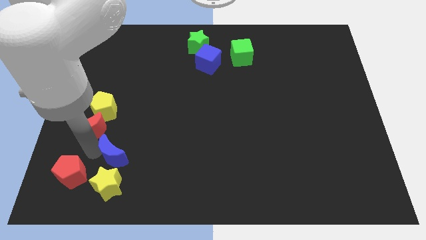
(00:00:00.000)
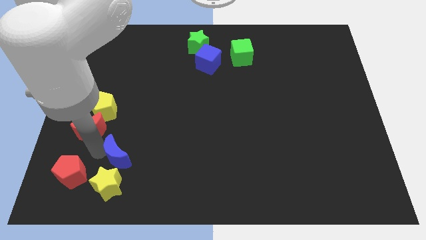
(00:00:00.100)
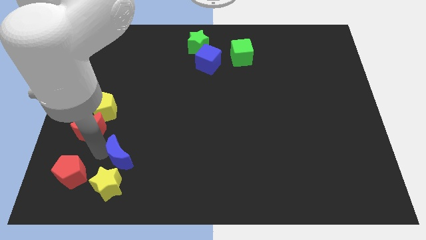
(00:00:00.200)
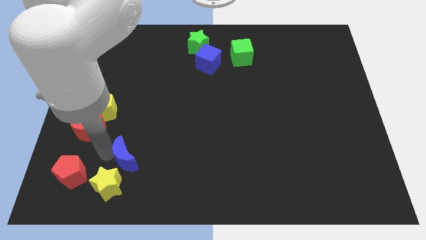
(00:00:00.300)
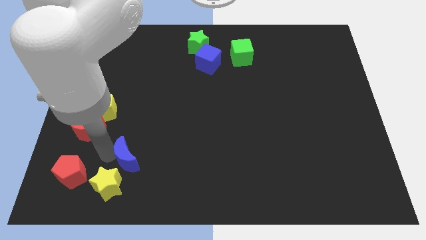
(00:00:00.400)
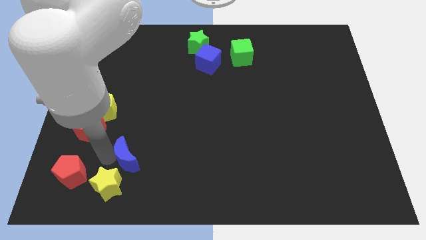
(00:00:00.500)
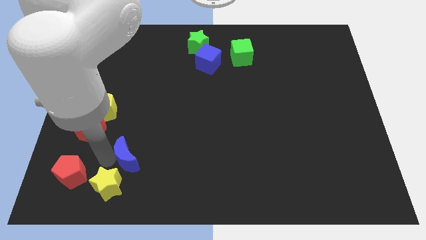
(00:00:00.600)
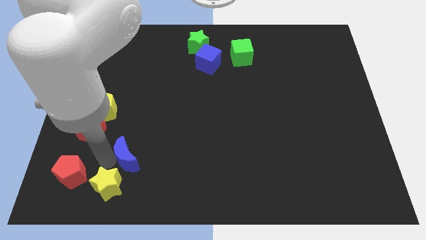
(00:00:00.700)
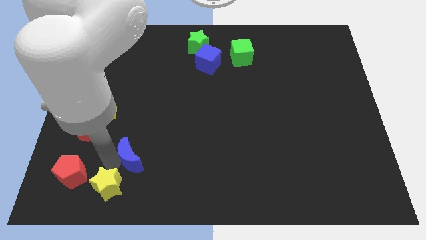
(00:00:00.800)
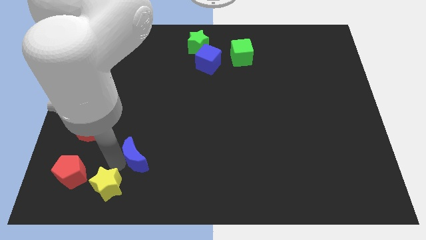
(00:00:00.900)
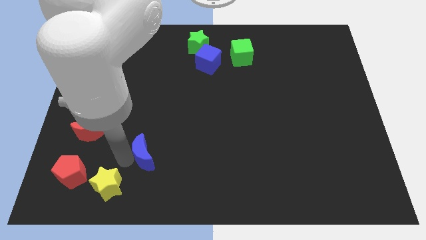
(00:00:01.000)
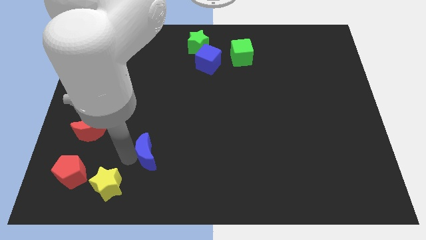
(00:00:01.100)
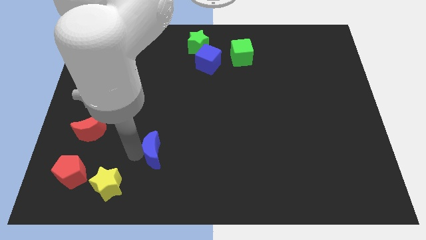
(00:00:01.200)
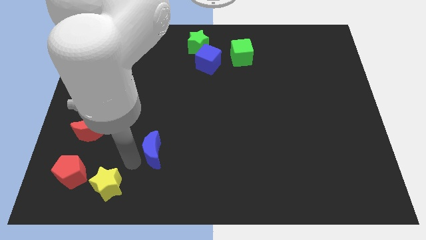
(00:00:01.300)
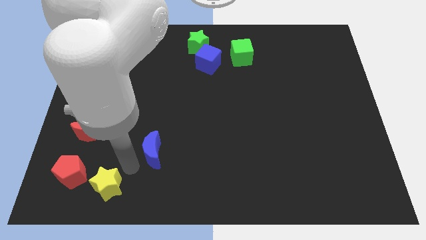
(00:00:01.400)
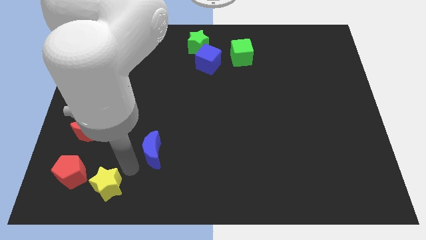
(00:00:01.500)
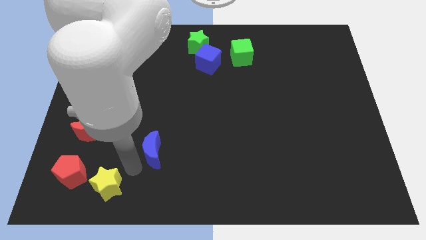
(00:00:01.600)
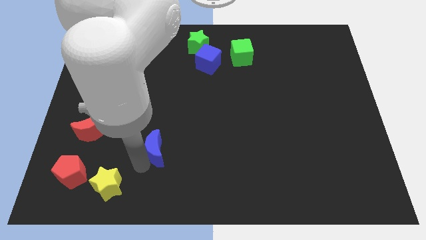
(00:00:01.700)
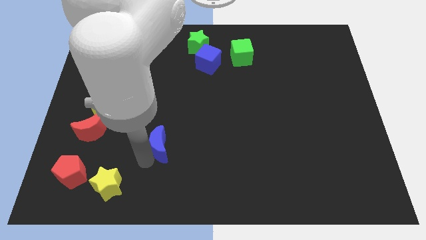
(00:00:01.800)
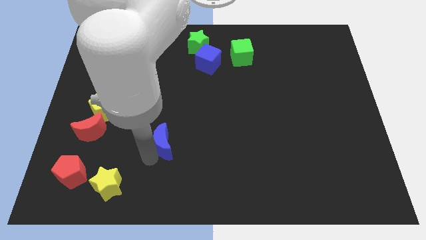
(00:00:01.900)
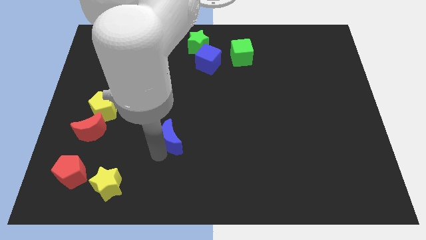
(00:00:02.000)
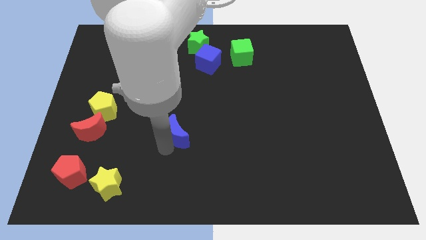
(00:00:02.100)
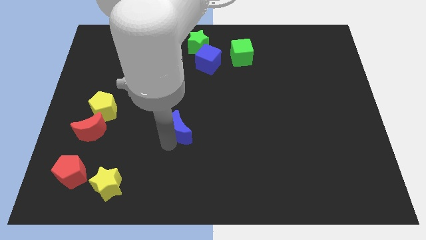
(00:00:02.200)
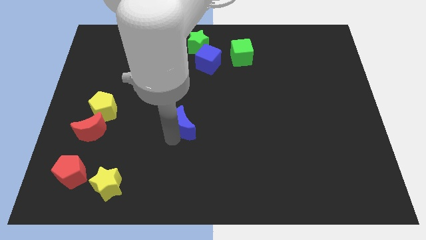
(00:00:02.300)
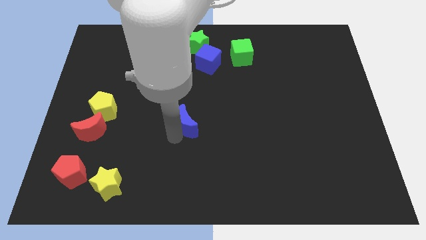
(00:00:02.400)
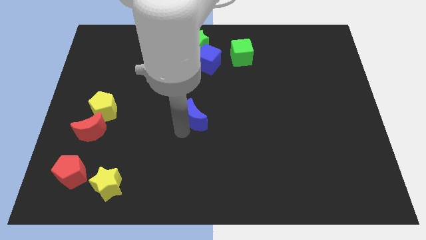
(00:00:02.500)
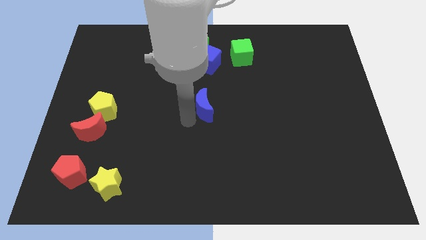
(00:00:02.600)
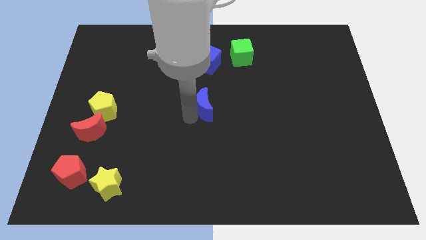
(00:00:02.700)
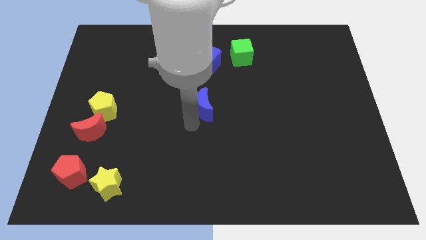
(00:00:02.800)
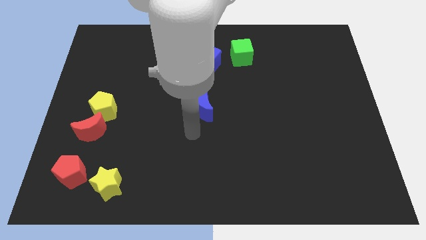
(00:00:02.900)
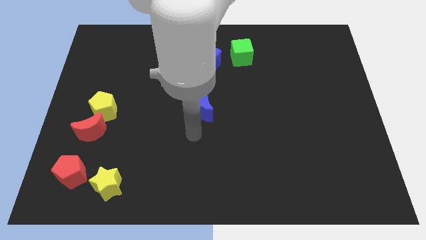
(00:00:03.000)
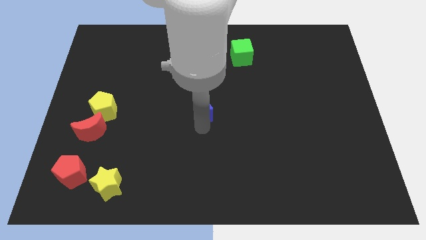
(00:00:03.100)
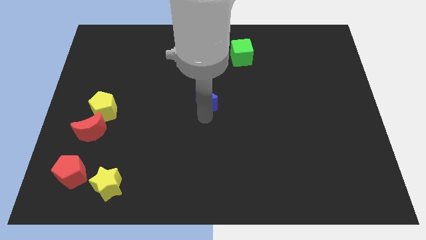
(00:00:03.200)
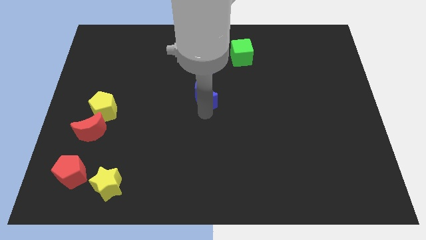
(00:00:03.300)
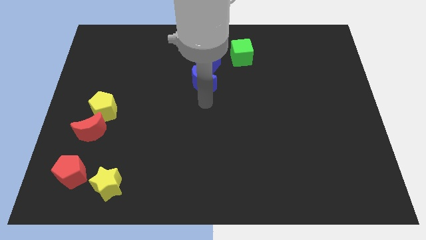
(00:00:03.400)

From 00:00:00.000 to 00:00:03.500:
place the blue moon at the bottom of blue cube

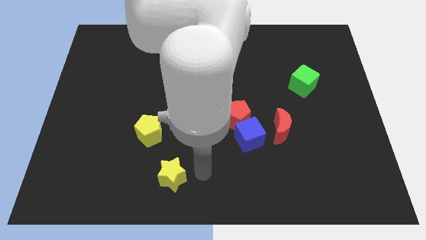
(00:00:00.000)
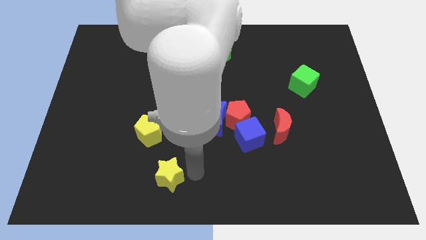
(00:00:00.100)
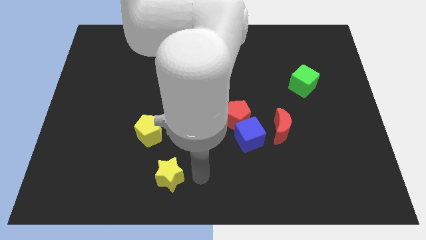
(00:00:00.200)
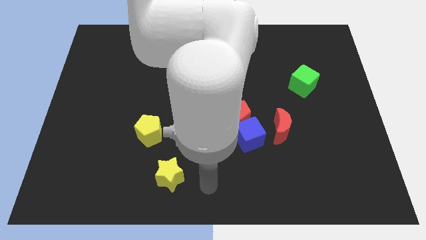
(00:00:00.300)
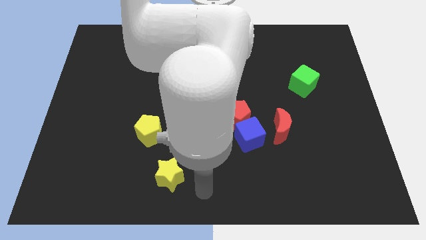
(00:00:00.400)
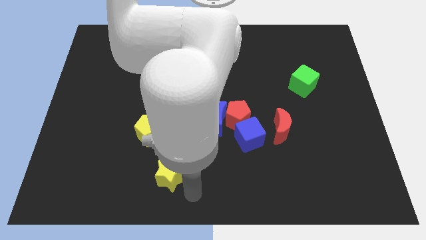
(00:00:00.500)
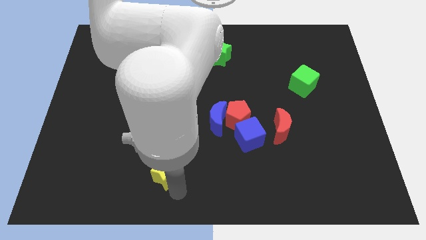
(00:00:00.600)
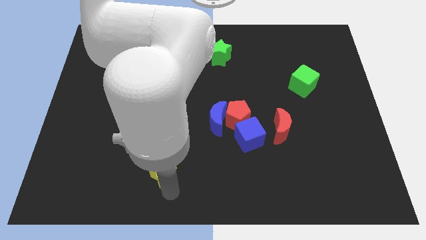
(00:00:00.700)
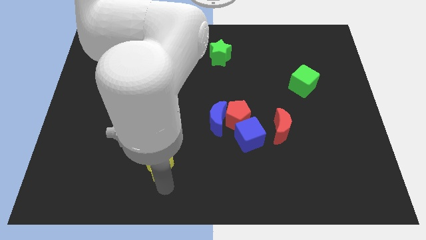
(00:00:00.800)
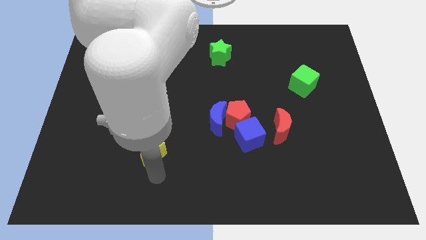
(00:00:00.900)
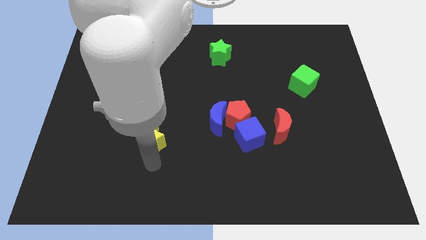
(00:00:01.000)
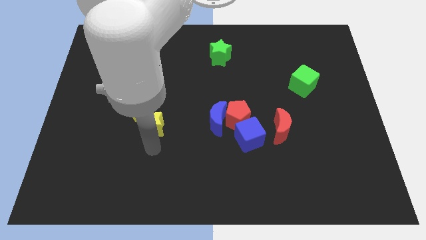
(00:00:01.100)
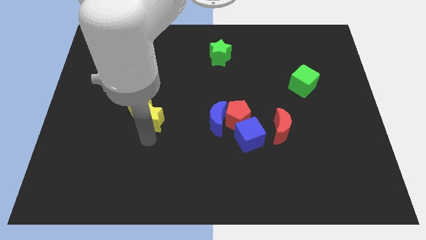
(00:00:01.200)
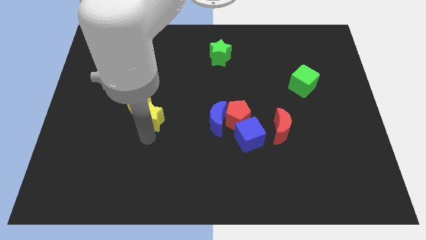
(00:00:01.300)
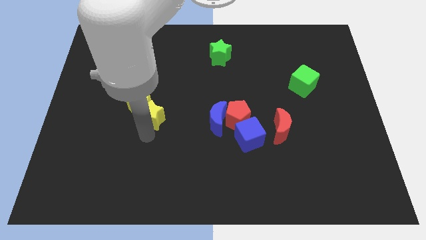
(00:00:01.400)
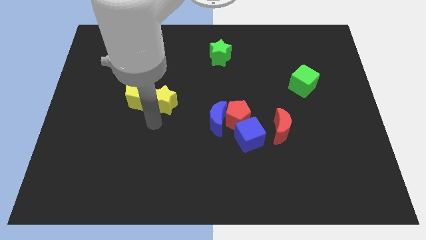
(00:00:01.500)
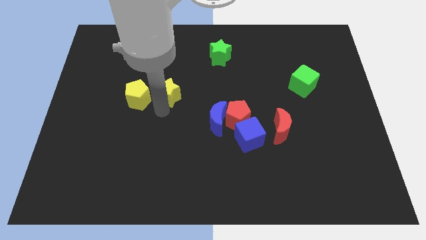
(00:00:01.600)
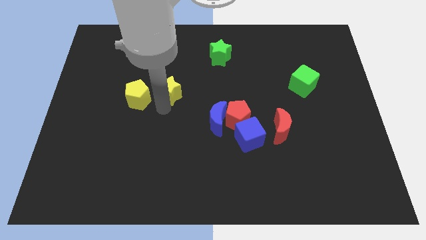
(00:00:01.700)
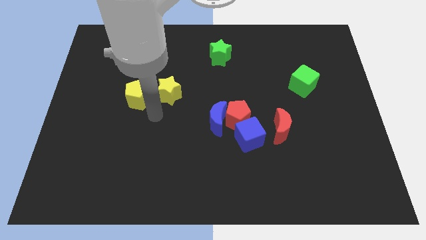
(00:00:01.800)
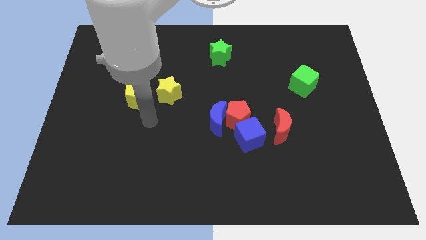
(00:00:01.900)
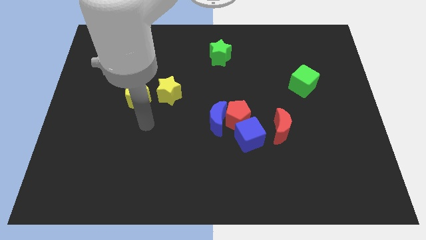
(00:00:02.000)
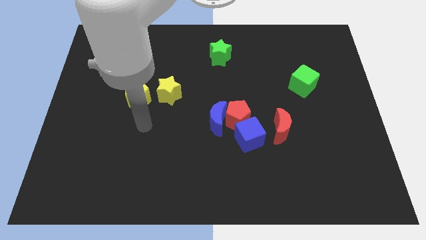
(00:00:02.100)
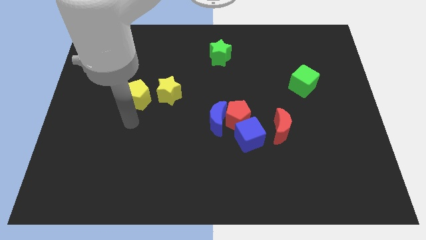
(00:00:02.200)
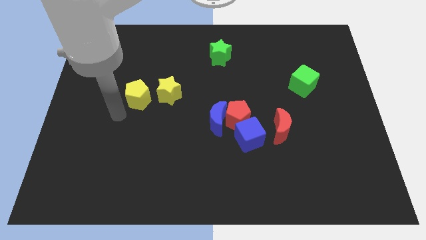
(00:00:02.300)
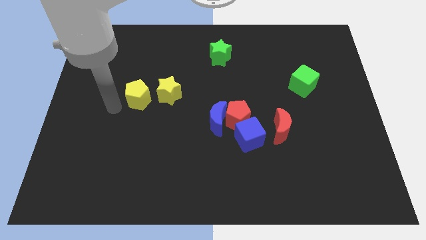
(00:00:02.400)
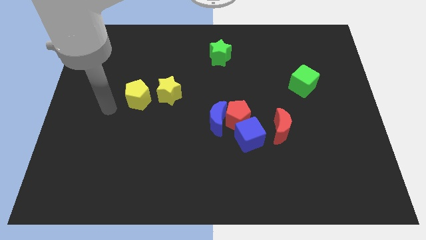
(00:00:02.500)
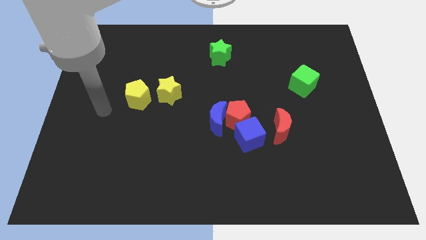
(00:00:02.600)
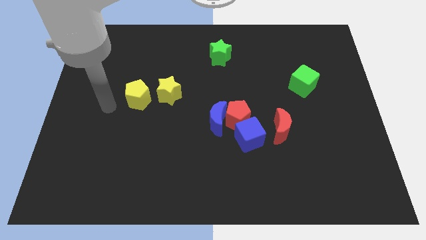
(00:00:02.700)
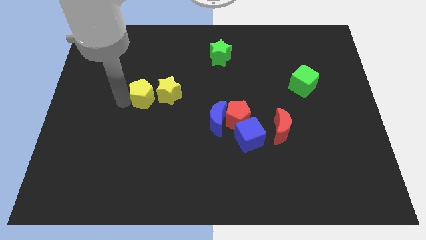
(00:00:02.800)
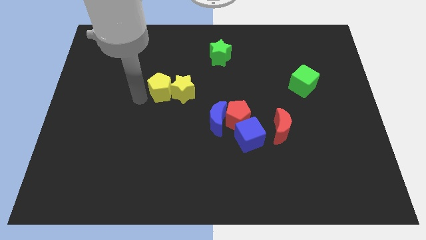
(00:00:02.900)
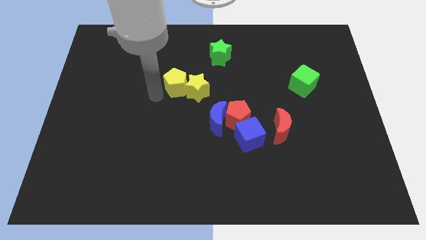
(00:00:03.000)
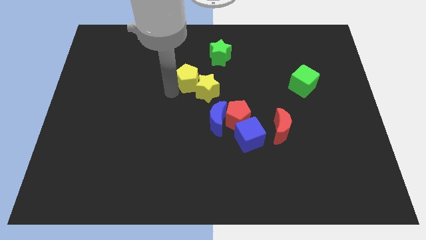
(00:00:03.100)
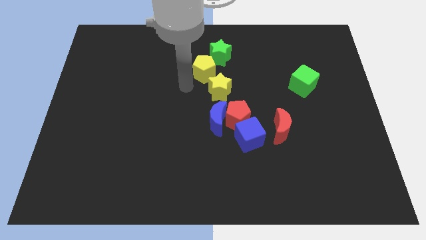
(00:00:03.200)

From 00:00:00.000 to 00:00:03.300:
place yellow blocks in the center

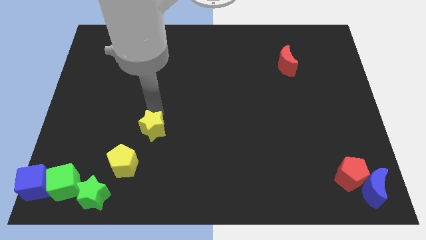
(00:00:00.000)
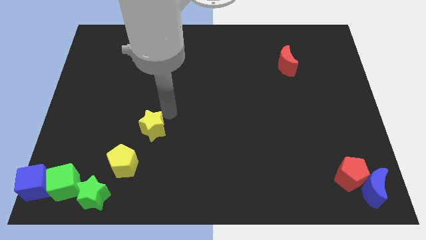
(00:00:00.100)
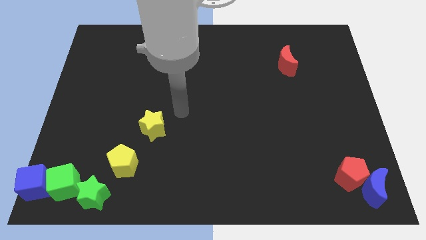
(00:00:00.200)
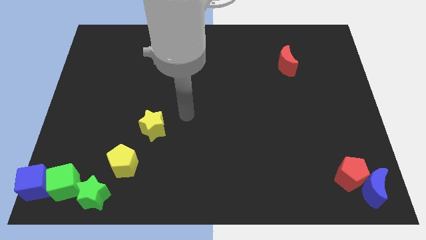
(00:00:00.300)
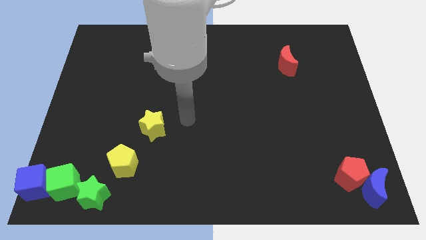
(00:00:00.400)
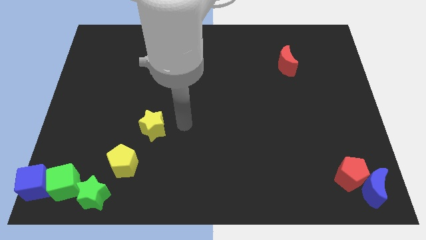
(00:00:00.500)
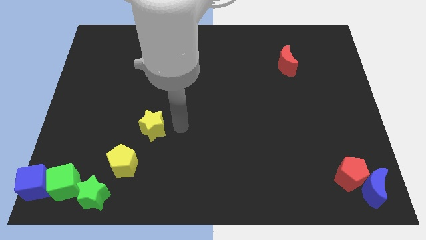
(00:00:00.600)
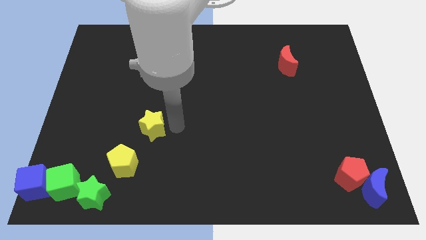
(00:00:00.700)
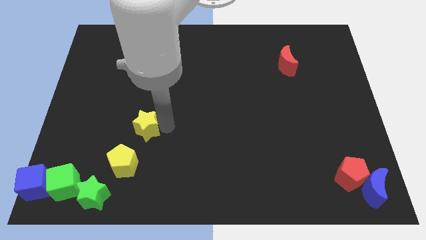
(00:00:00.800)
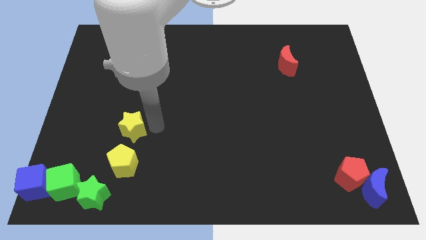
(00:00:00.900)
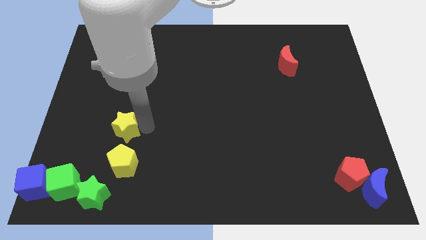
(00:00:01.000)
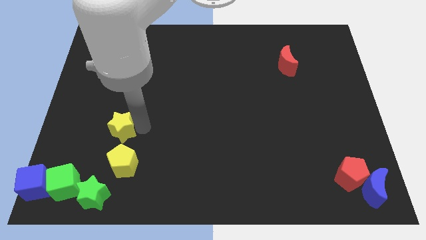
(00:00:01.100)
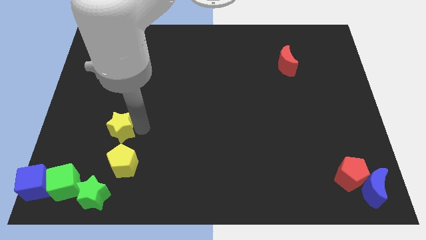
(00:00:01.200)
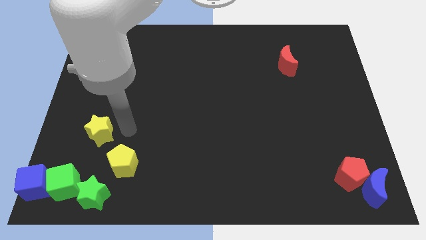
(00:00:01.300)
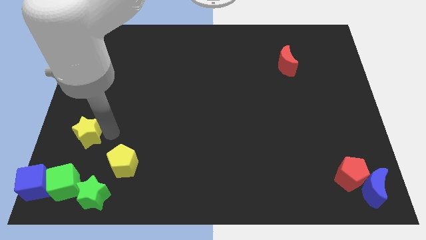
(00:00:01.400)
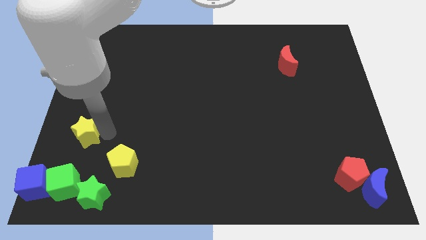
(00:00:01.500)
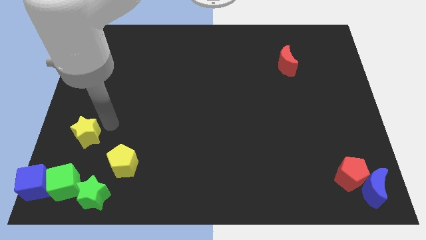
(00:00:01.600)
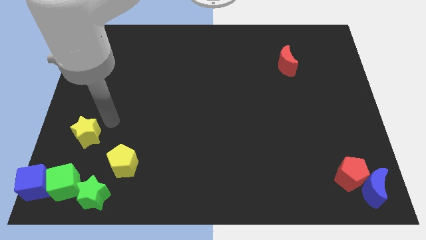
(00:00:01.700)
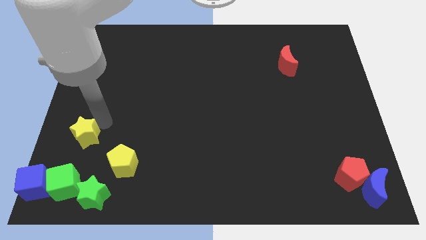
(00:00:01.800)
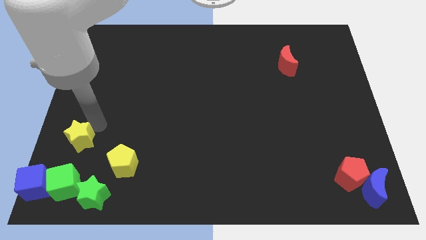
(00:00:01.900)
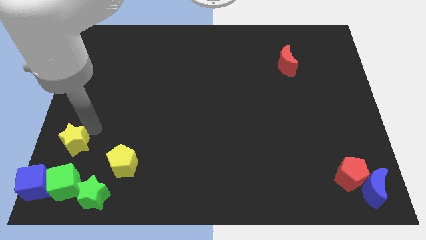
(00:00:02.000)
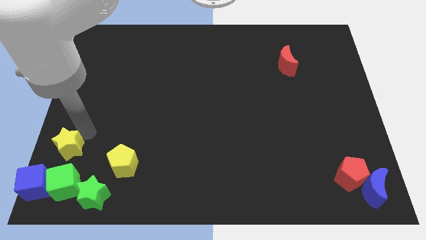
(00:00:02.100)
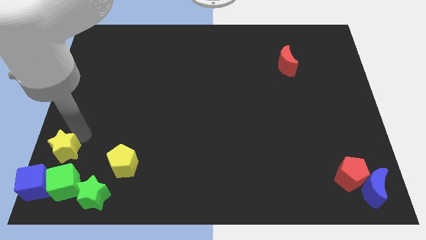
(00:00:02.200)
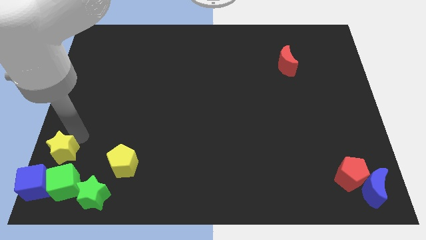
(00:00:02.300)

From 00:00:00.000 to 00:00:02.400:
push yellow star above green cube
